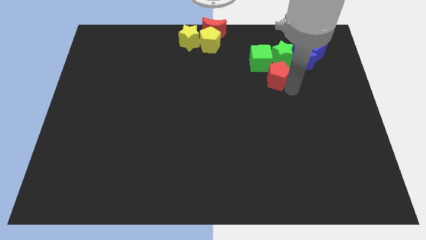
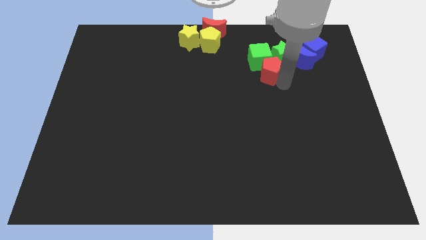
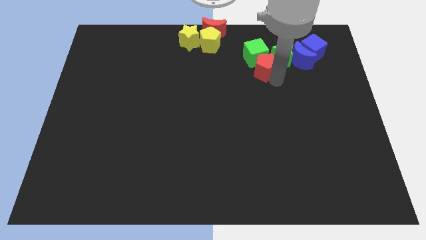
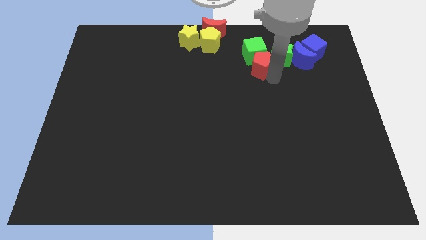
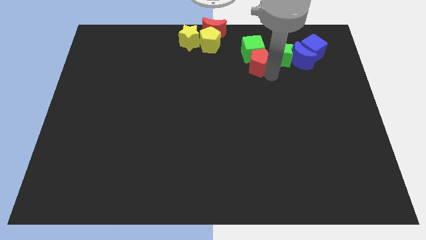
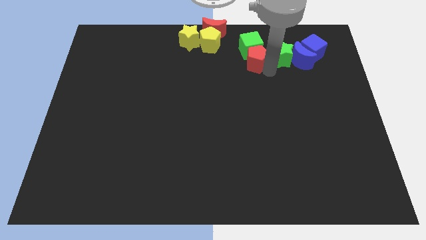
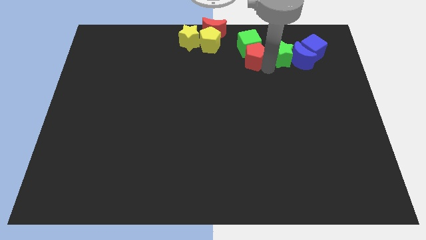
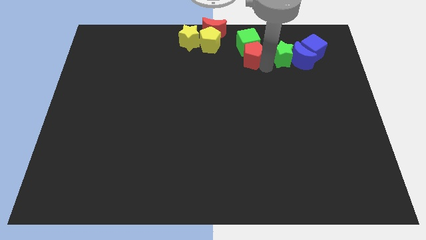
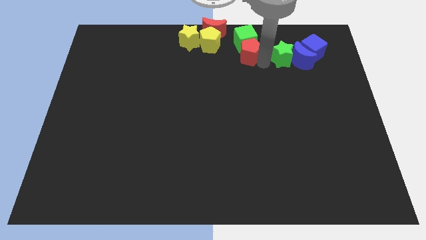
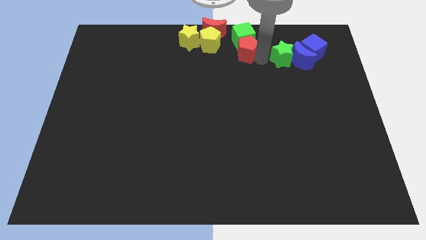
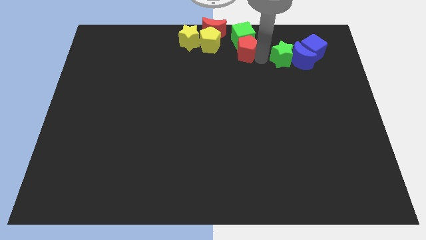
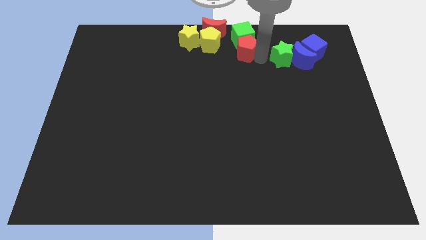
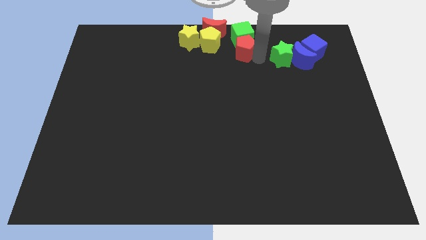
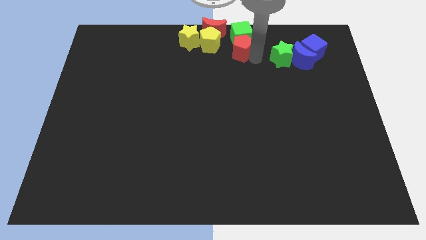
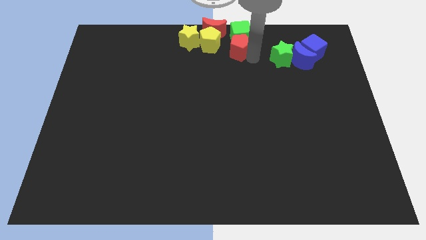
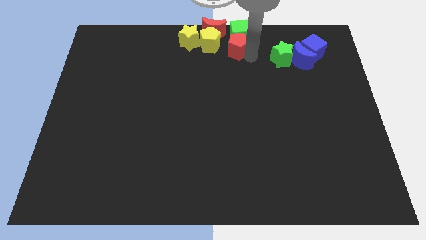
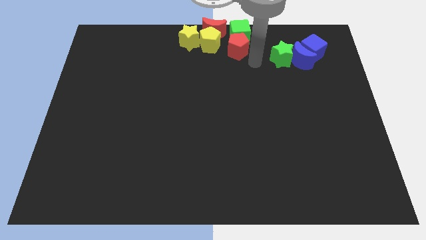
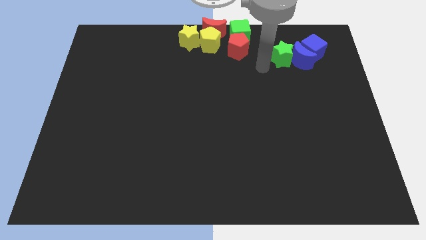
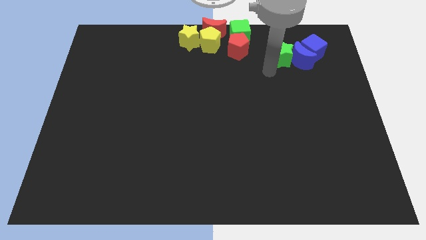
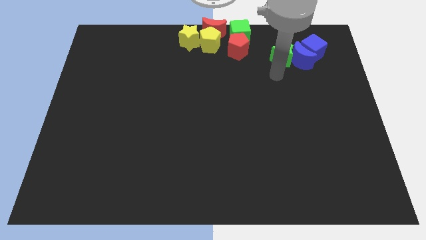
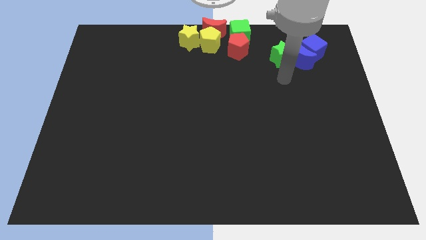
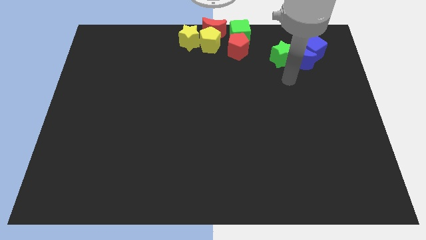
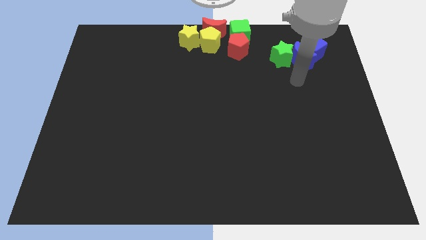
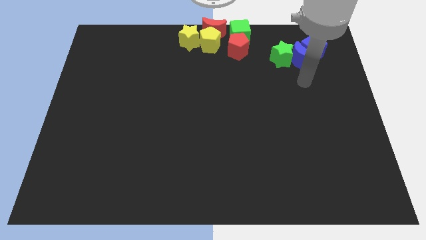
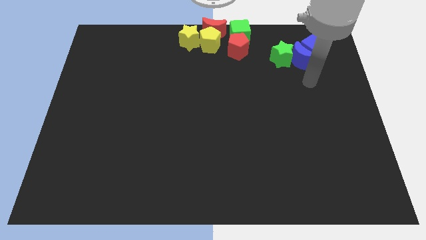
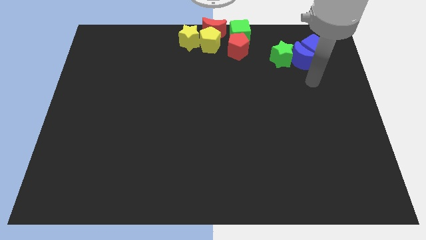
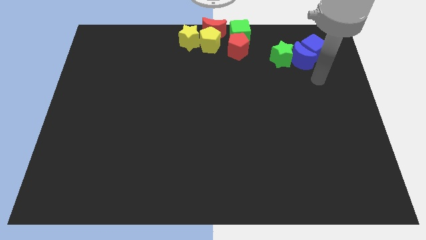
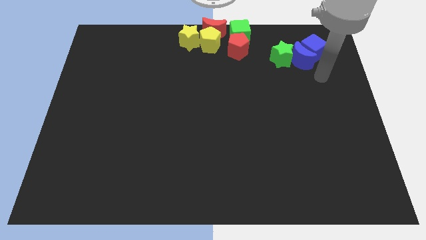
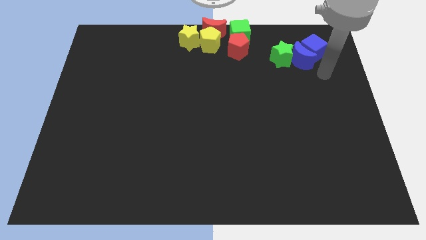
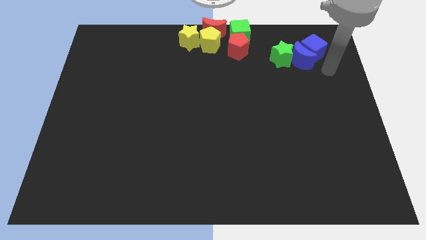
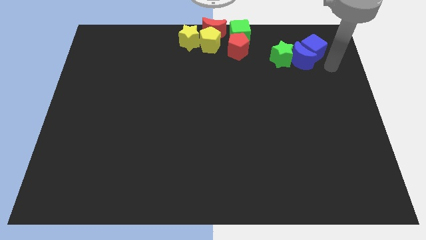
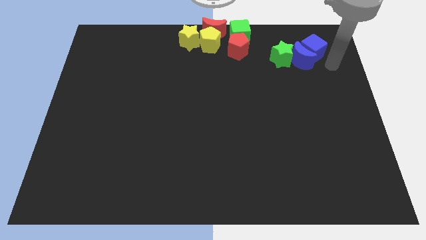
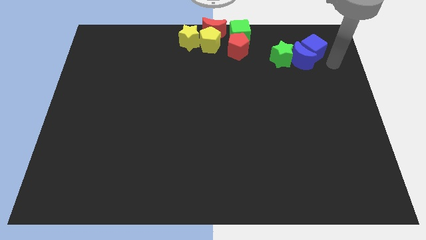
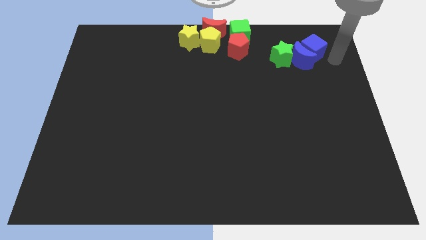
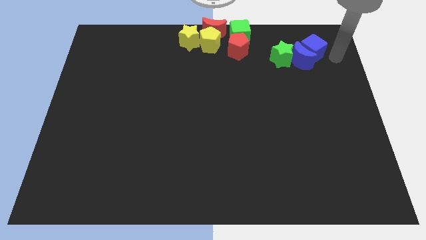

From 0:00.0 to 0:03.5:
place the green cube to the right side of the red crescent using the red pentagon

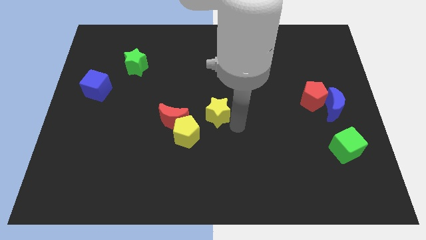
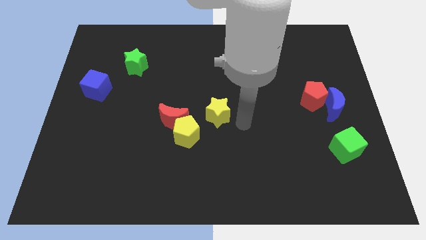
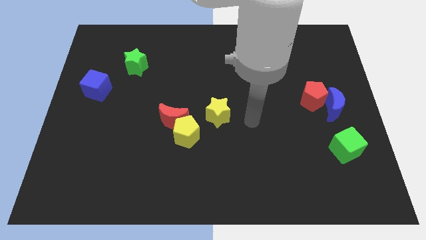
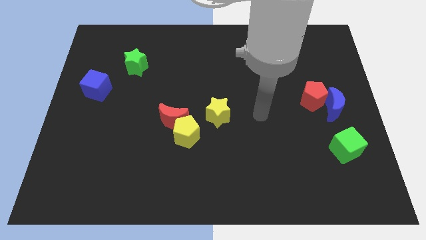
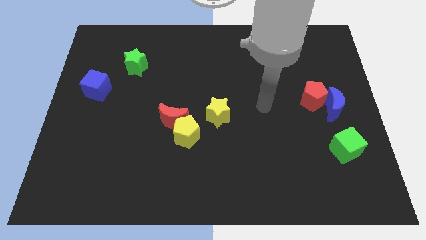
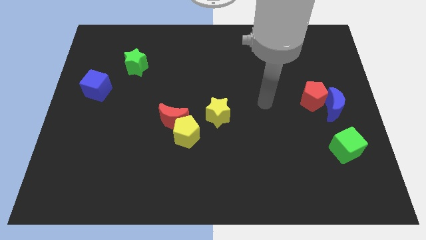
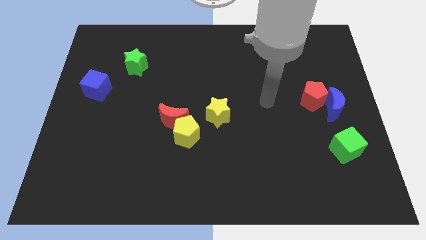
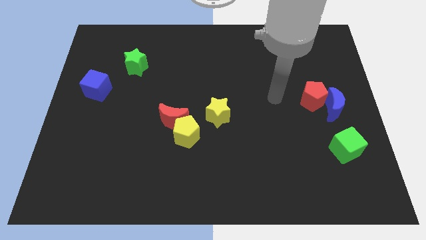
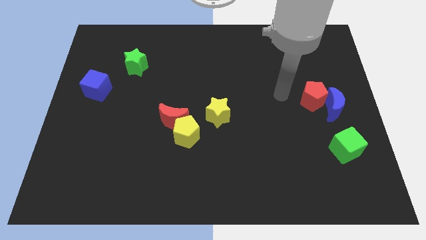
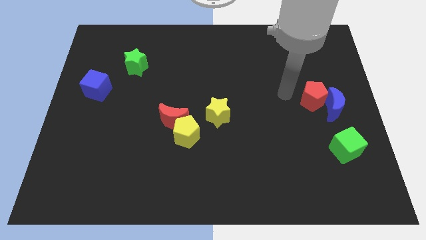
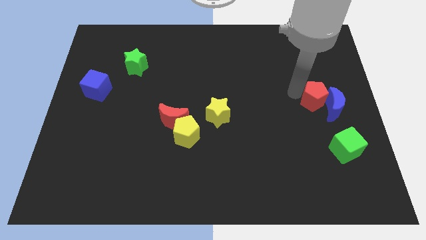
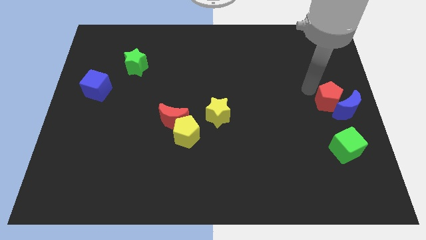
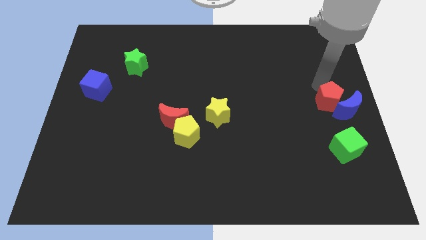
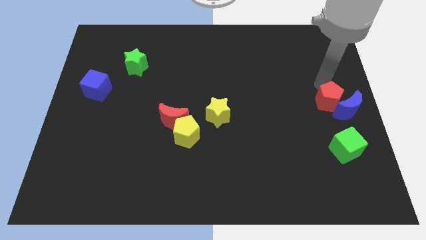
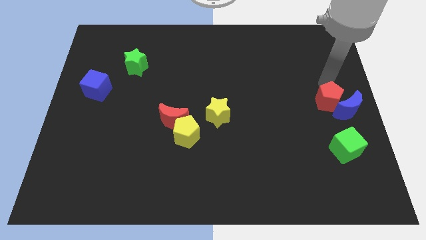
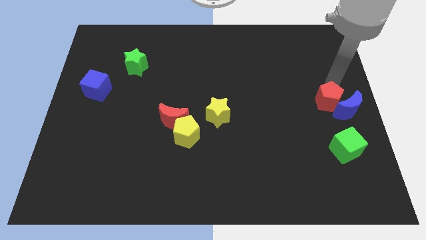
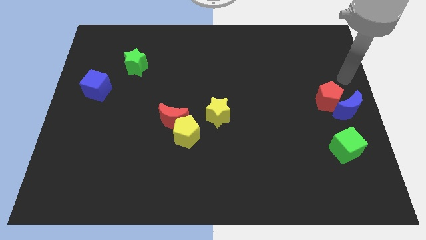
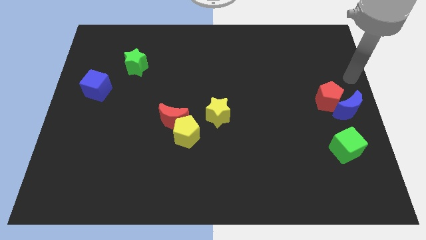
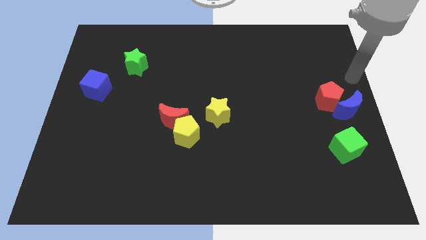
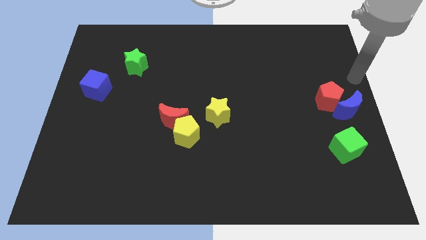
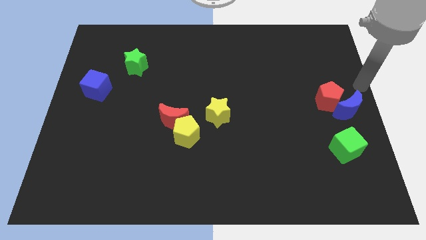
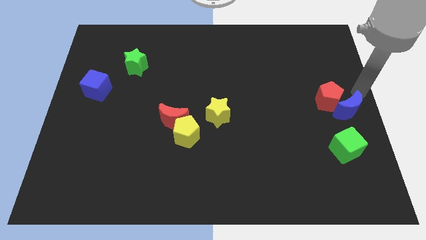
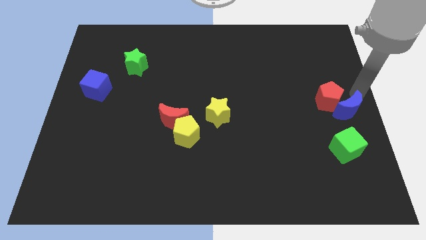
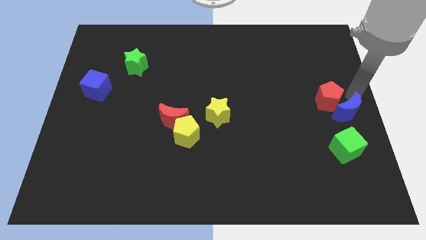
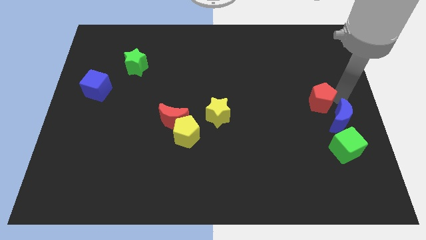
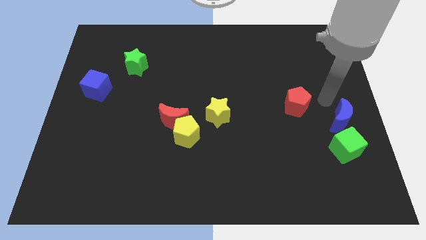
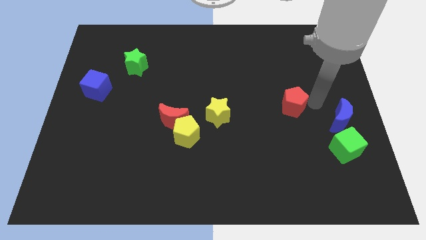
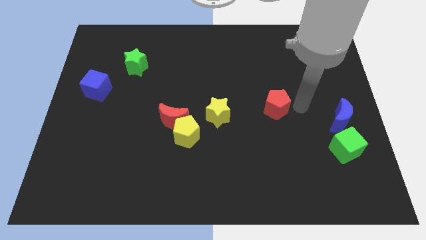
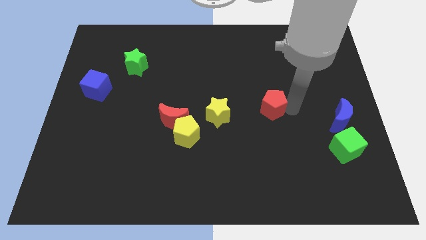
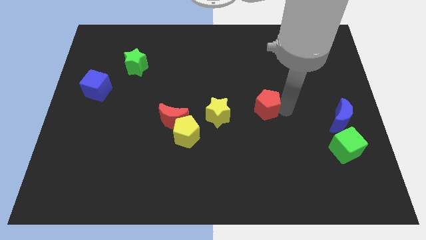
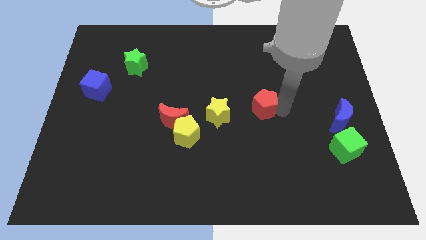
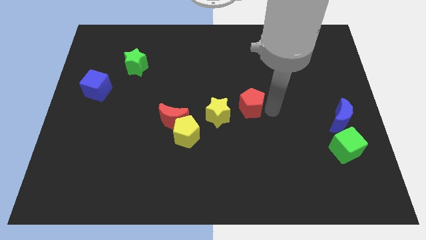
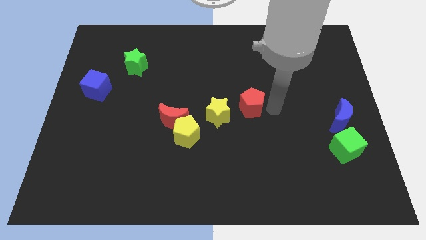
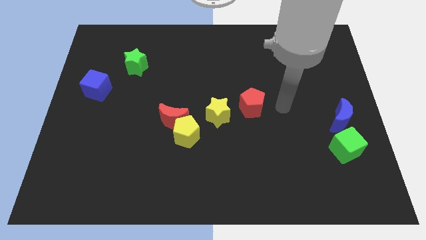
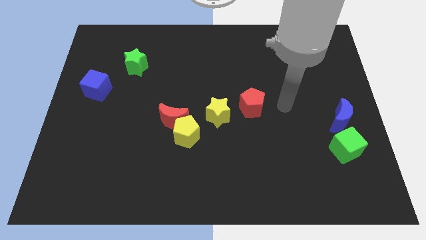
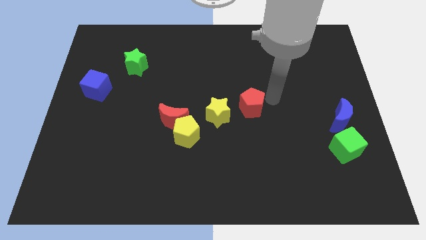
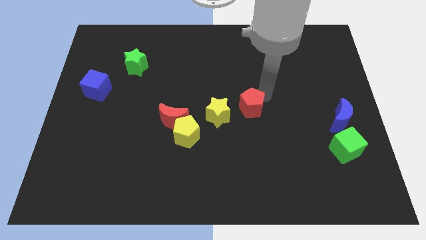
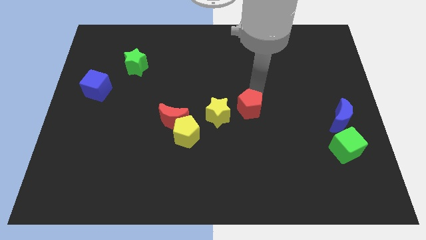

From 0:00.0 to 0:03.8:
separate the red pentagon from the blue crescent

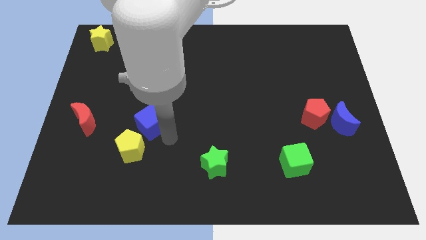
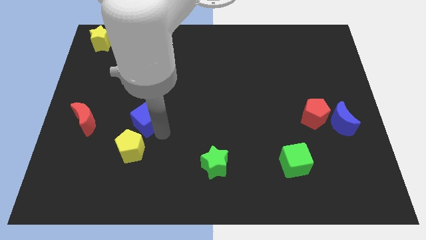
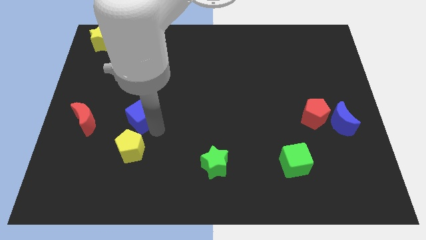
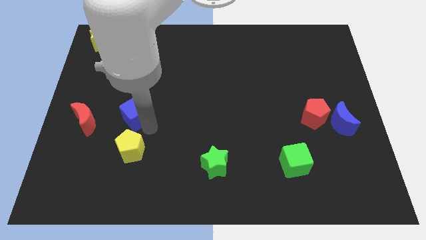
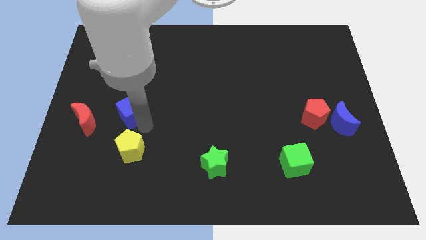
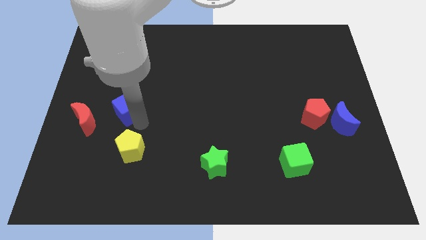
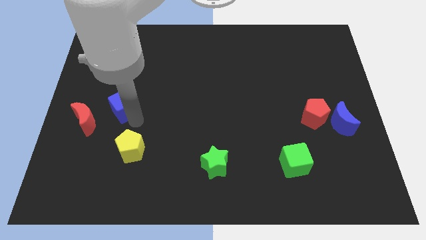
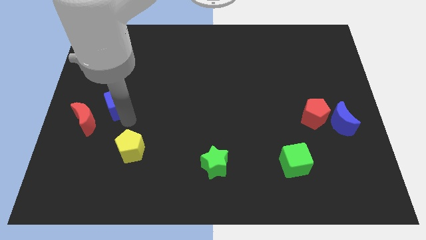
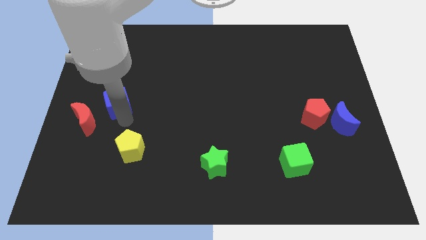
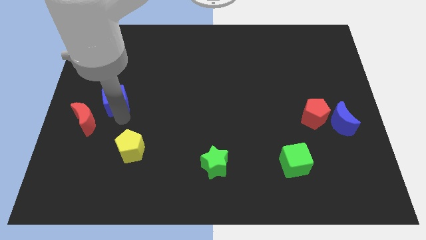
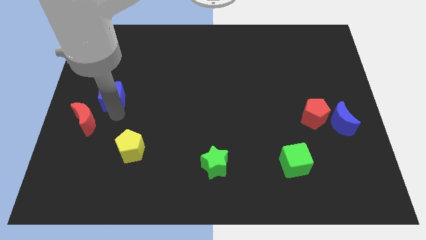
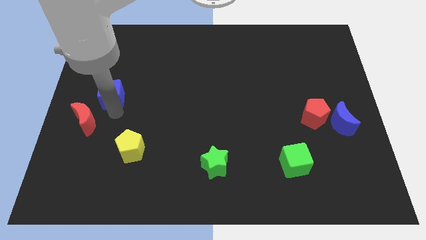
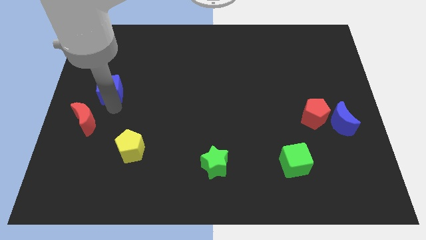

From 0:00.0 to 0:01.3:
move the blue cube towards the yellow star

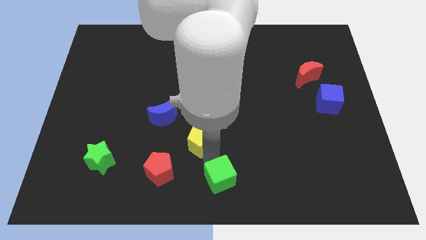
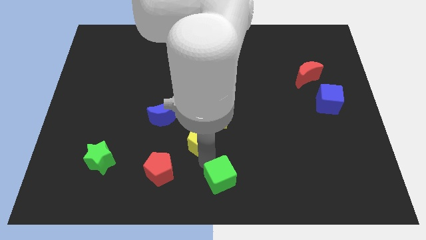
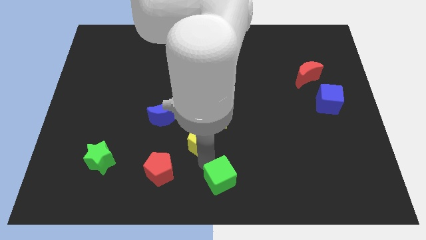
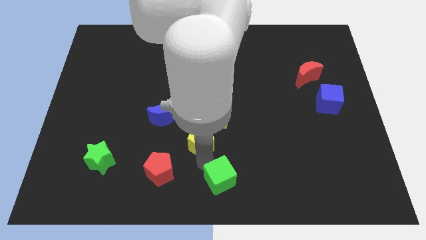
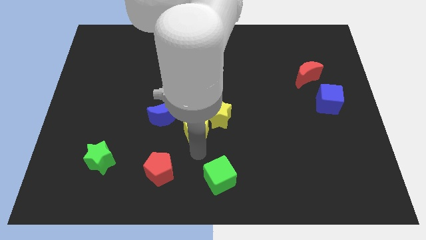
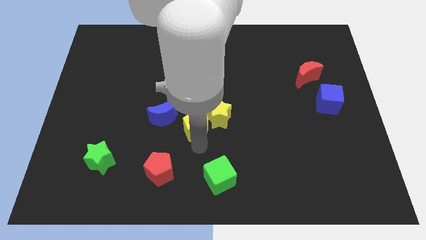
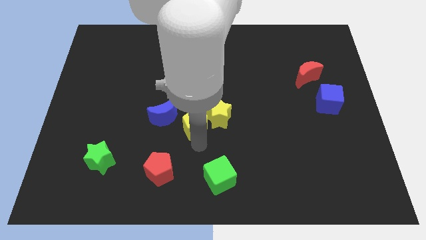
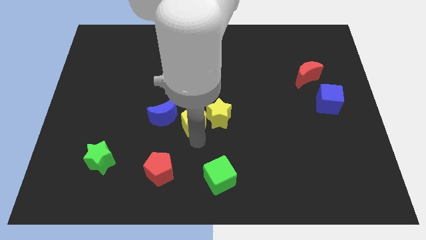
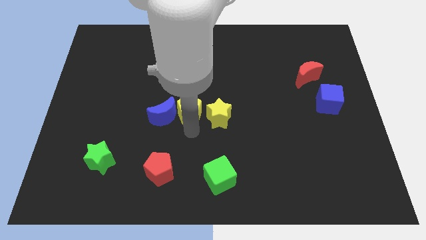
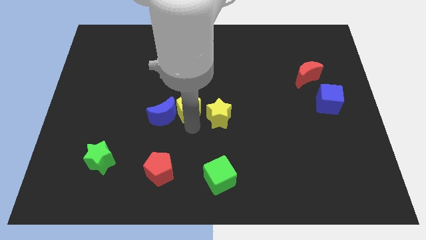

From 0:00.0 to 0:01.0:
place the yellow pentagon in between the yellow star and the blue crescent
